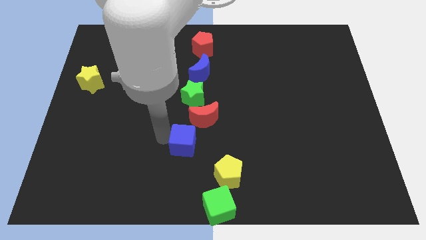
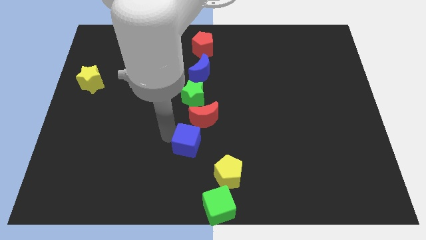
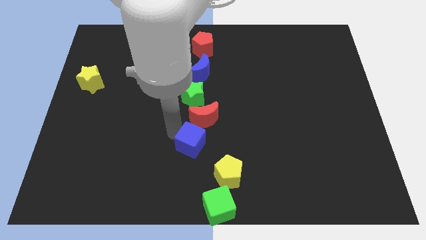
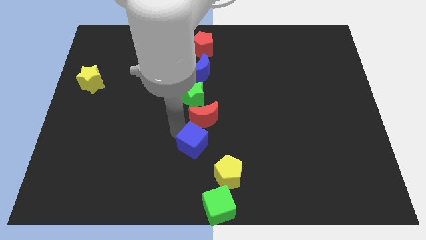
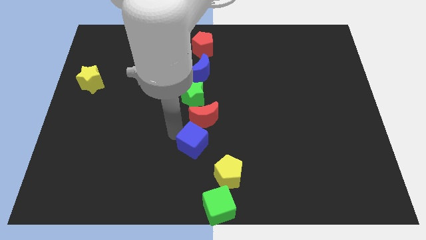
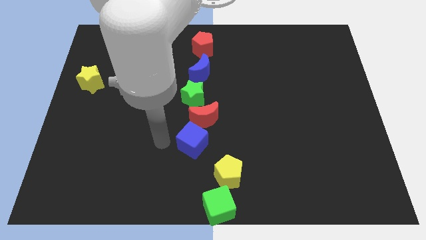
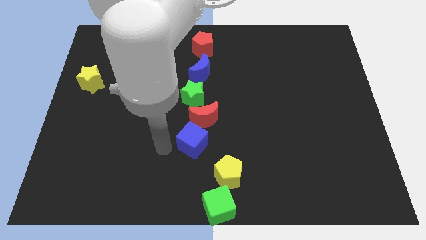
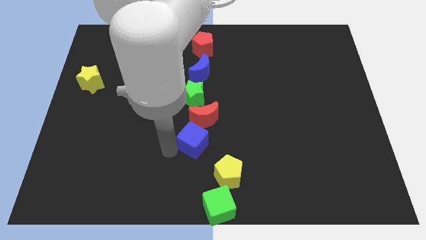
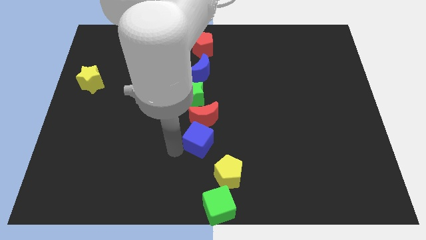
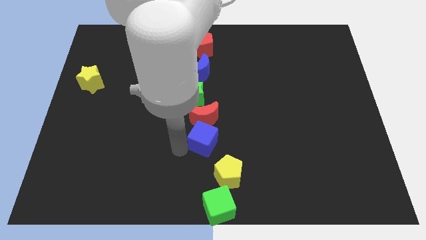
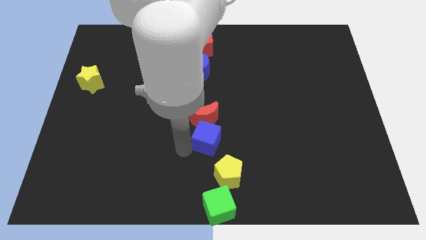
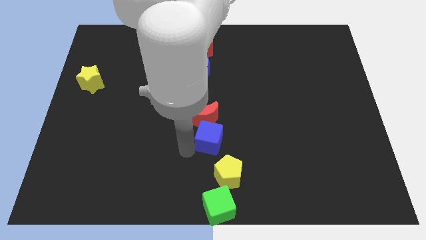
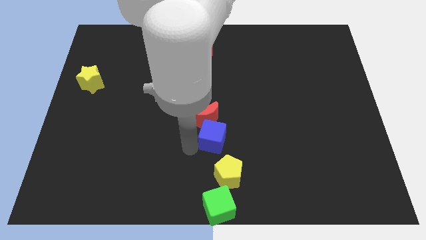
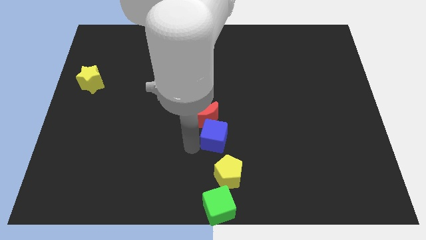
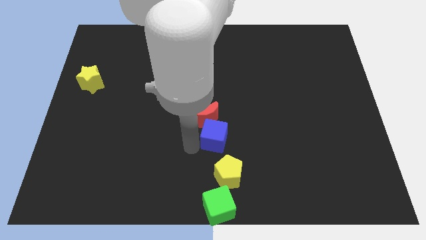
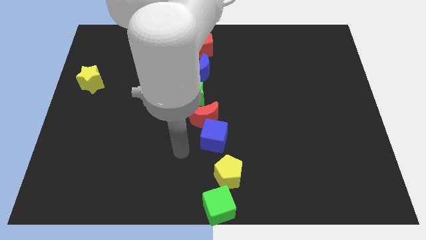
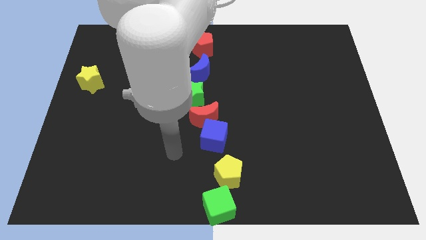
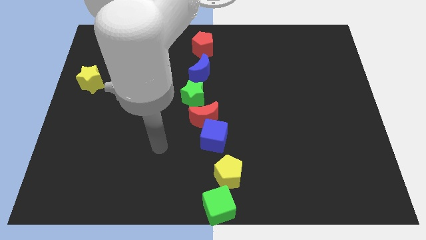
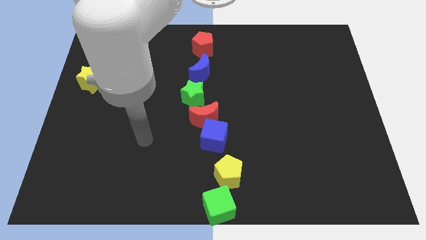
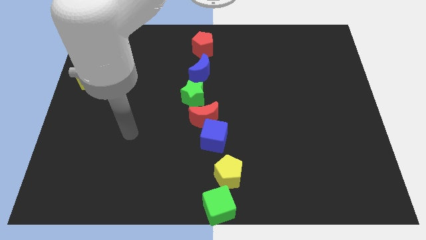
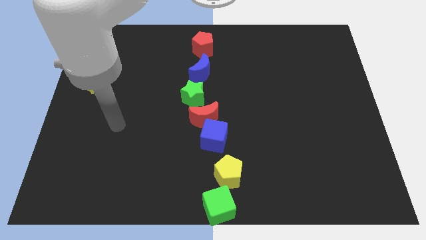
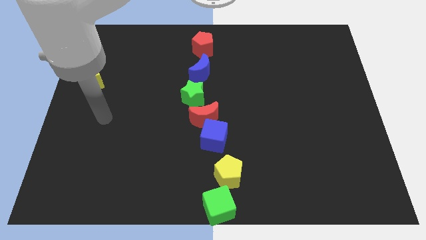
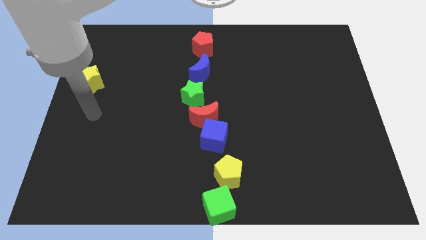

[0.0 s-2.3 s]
place the blue cube in between red crescent and yellow pentagon

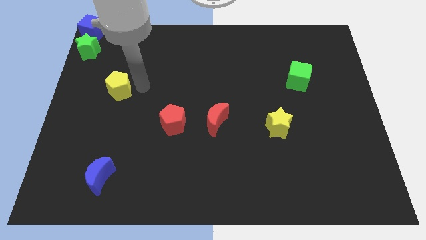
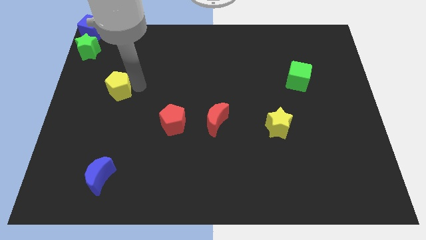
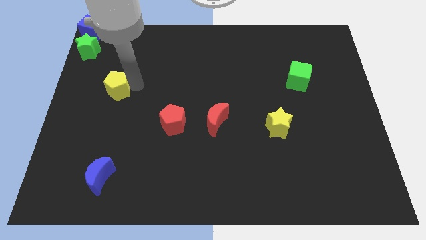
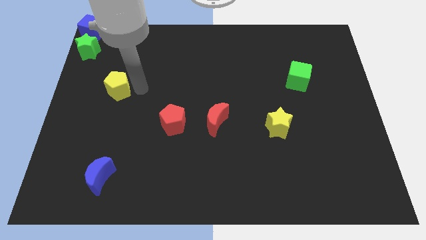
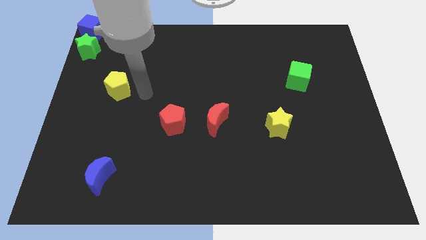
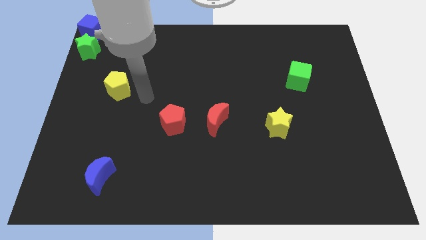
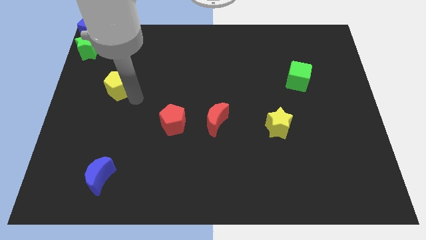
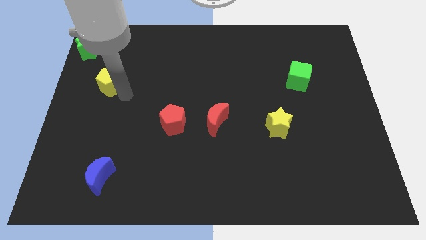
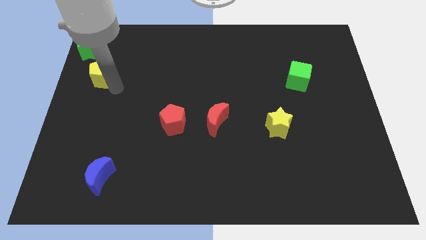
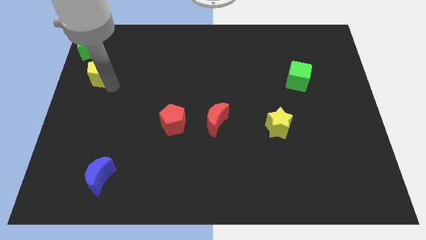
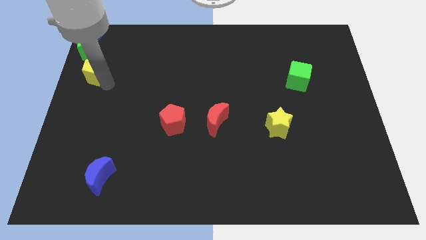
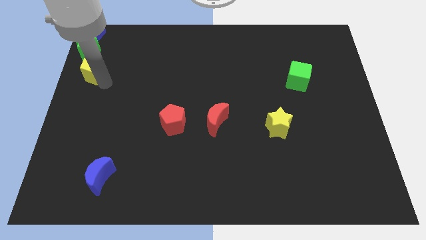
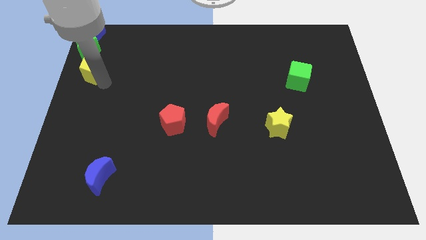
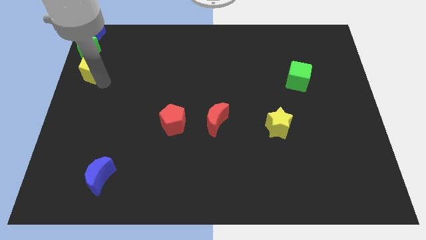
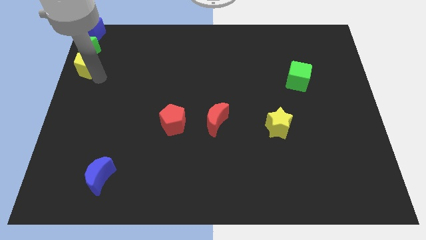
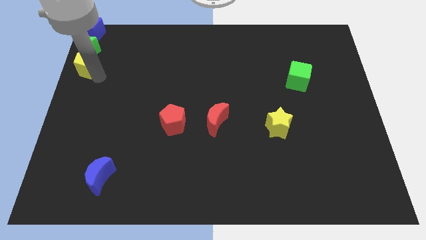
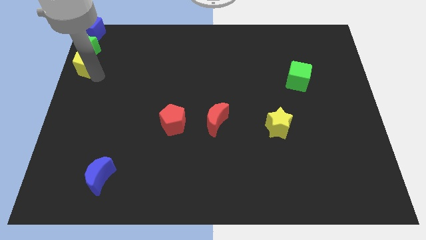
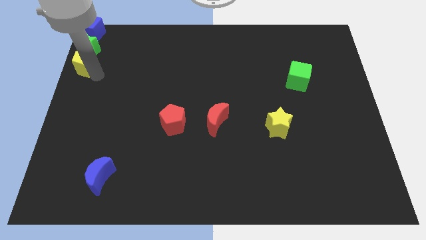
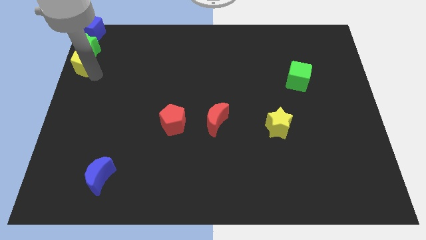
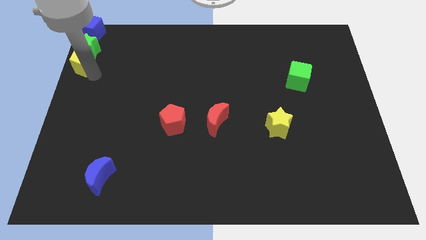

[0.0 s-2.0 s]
place the yellow pentagon below green star

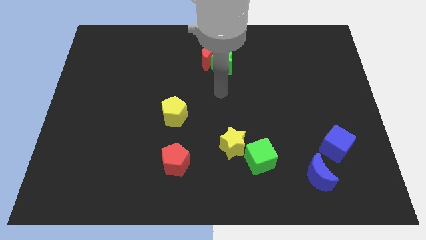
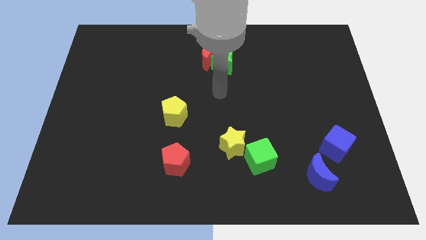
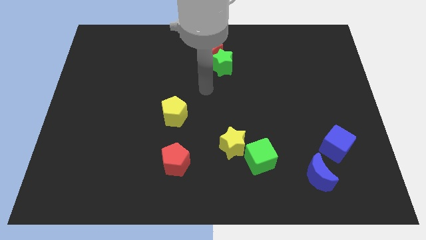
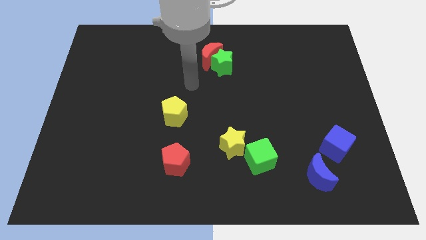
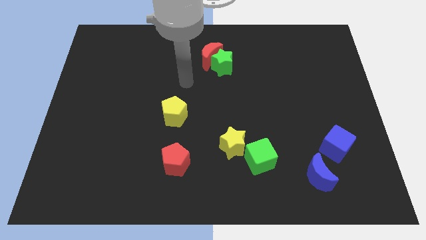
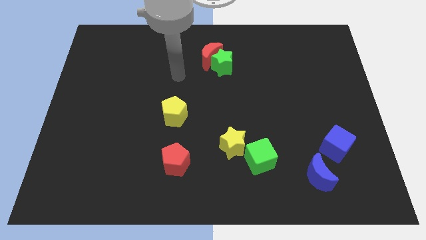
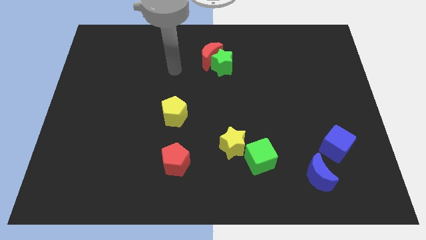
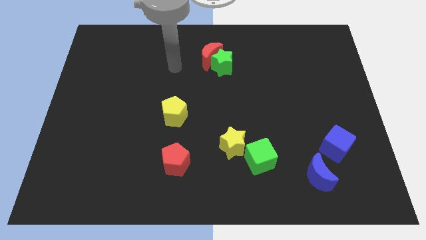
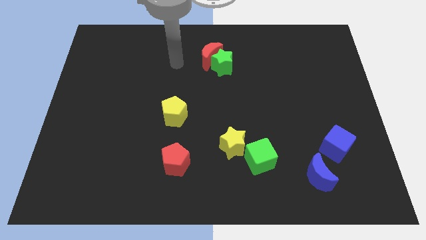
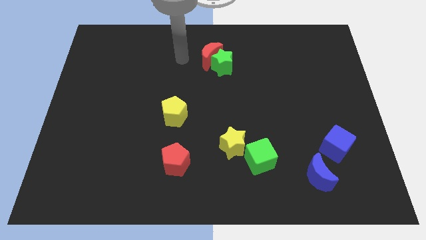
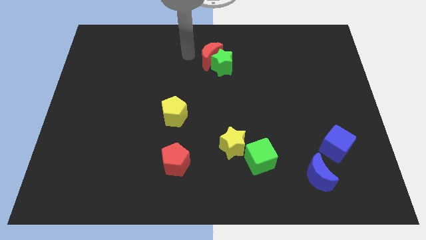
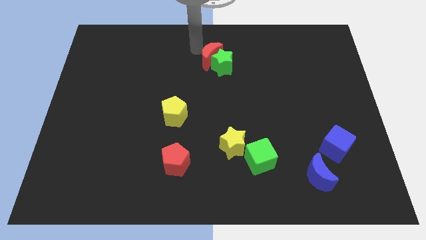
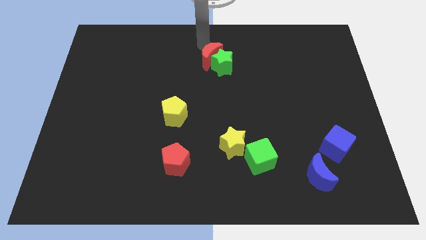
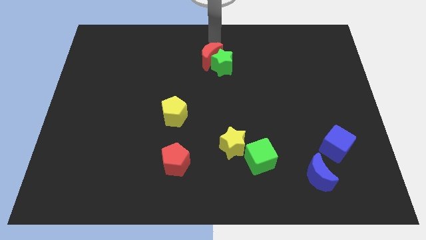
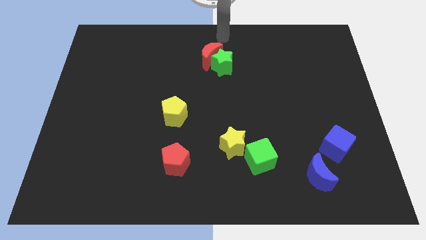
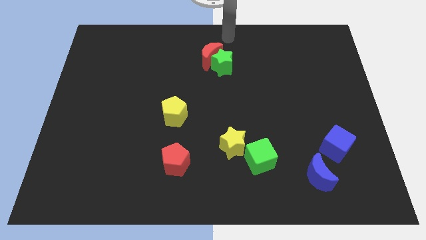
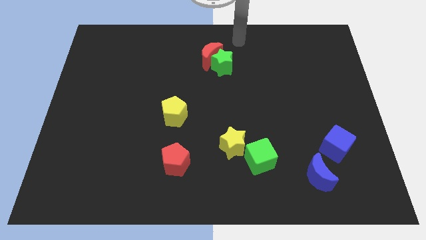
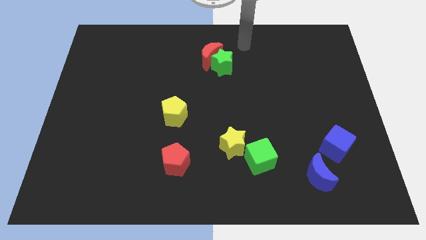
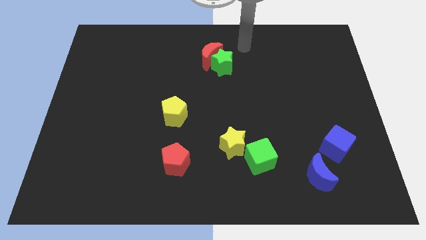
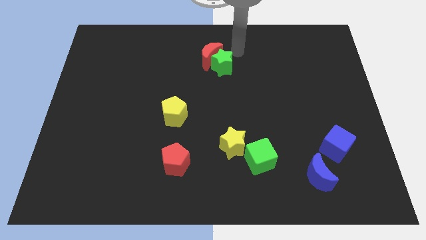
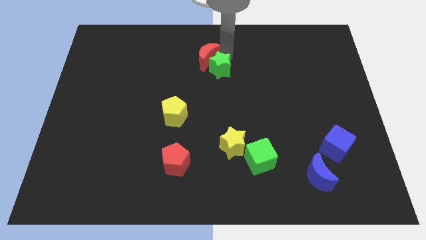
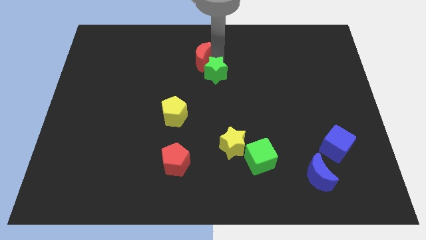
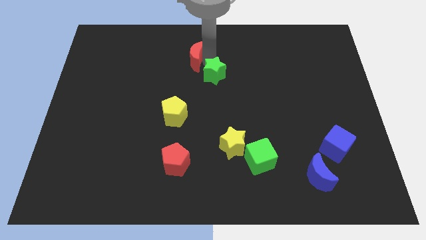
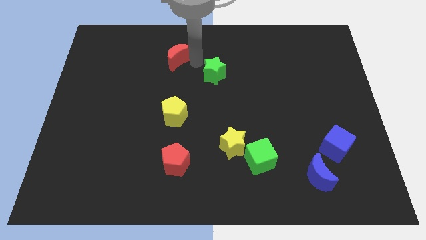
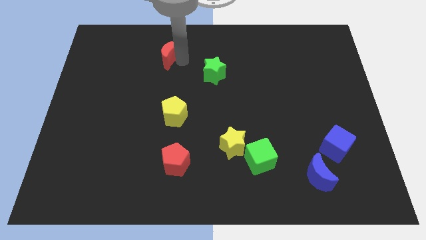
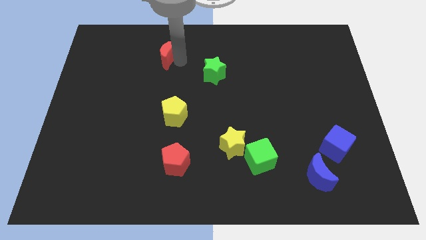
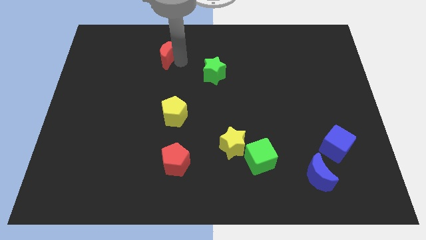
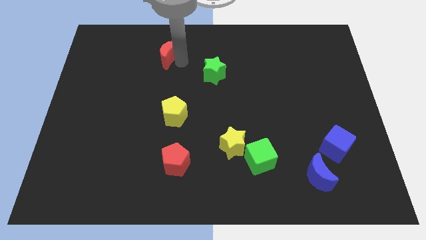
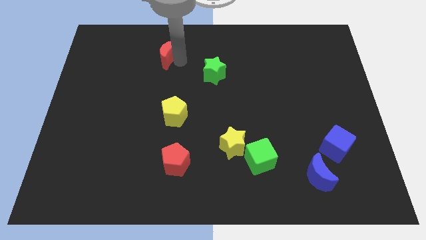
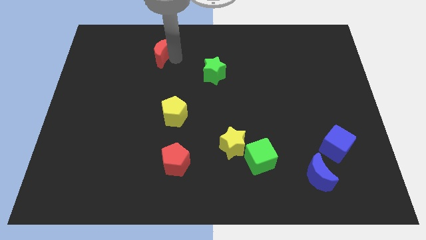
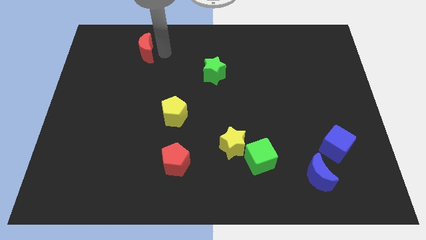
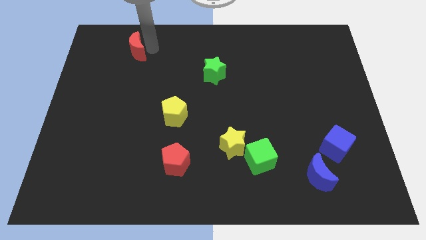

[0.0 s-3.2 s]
separate the red moon from the green star

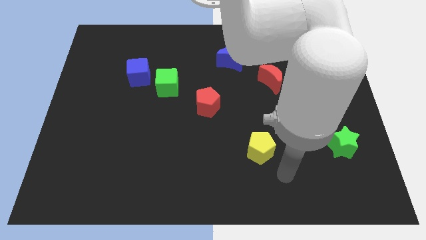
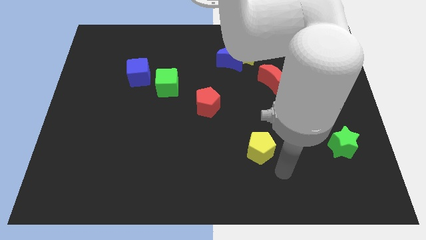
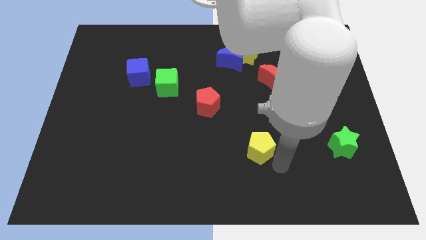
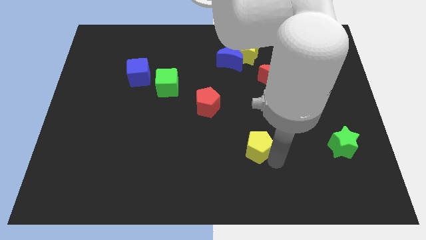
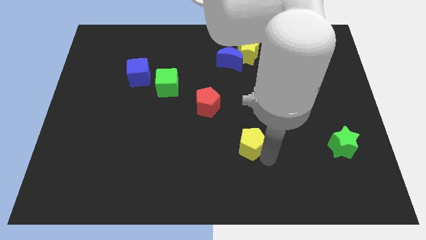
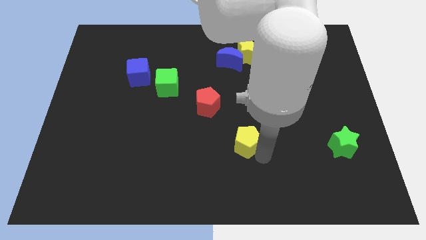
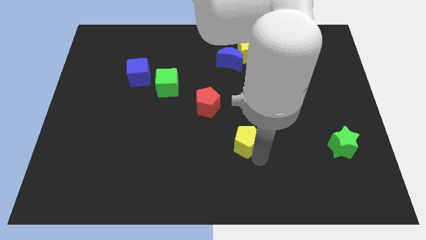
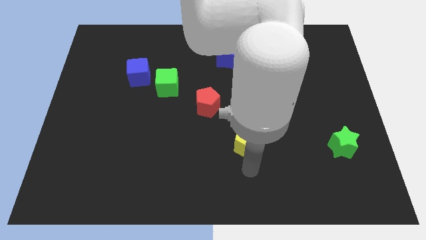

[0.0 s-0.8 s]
move the yellow penatgon towardsthe center of the board

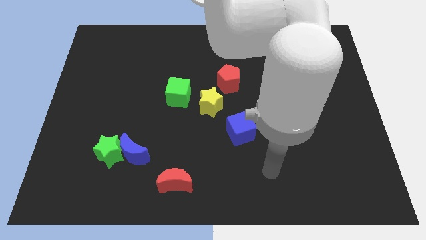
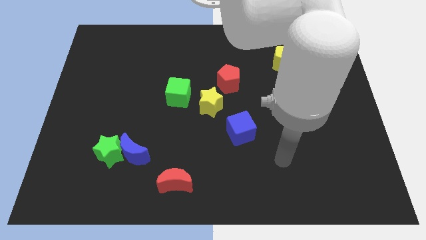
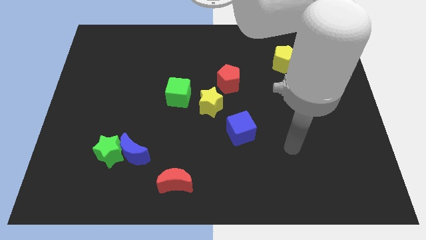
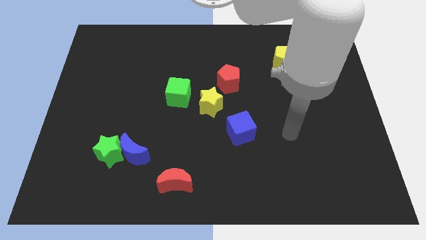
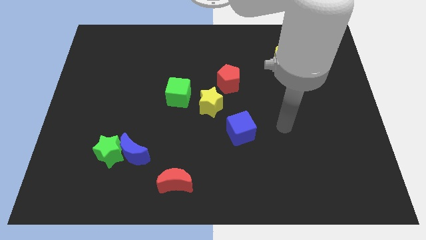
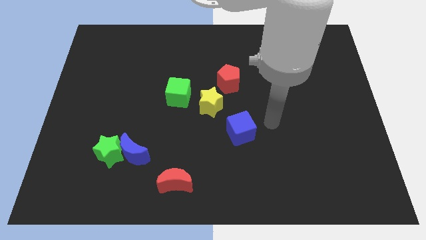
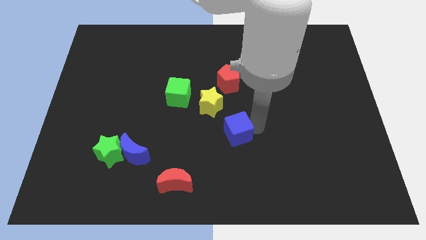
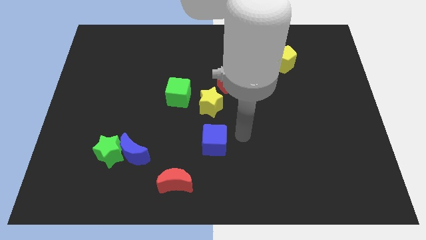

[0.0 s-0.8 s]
move the blue cube to the parallel bottom of the yellow star
